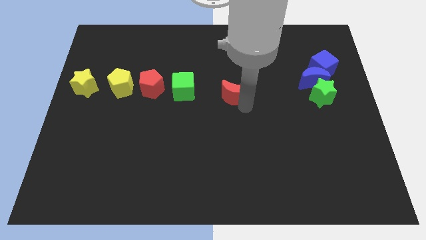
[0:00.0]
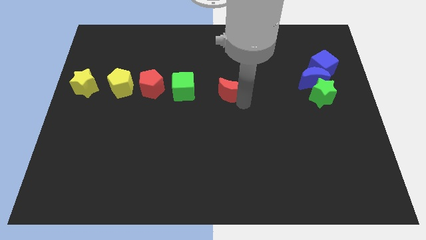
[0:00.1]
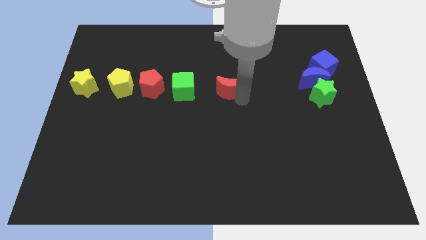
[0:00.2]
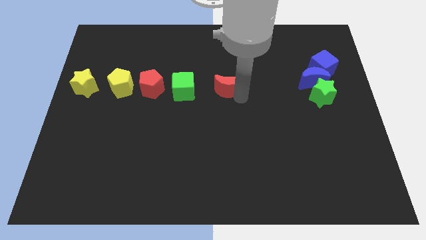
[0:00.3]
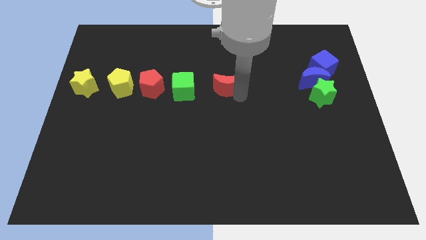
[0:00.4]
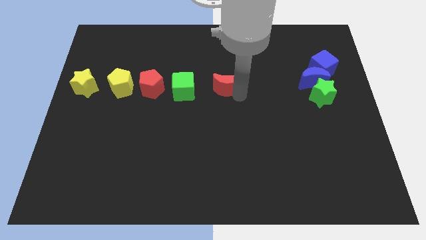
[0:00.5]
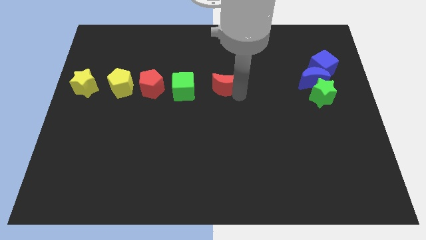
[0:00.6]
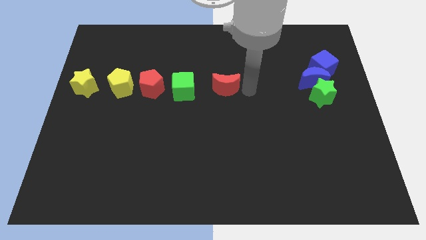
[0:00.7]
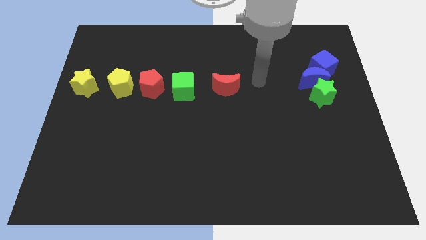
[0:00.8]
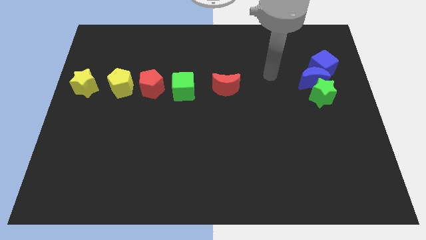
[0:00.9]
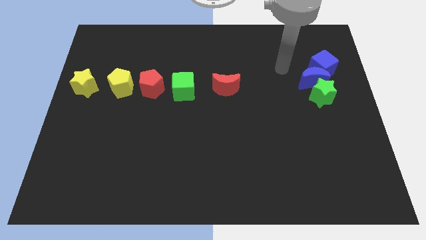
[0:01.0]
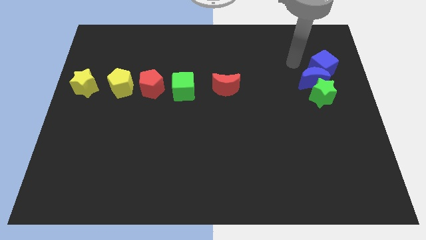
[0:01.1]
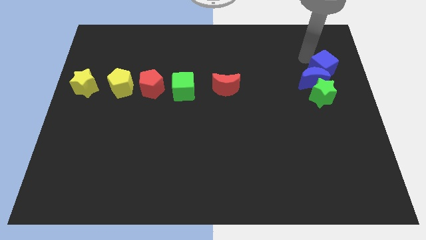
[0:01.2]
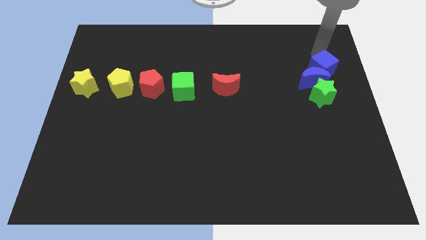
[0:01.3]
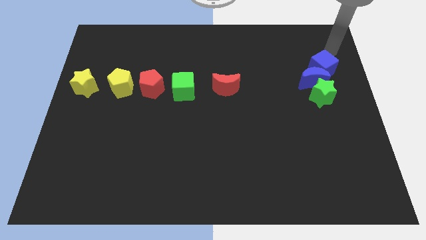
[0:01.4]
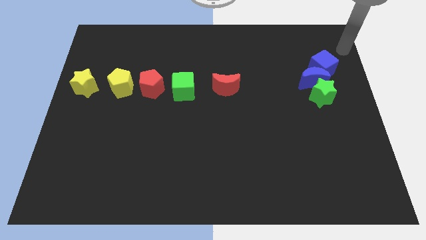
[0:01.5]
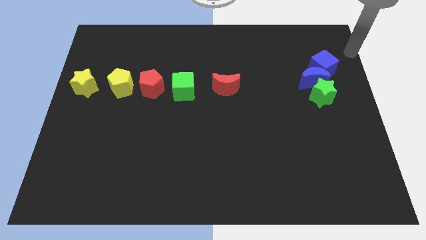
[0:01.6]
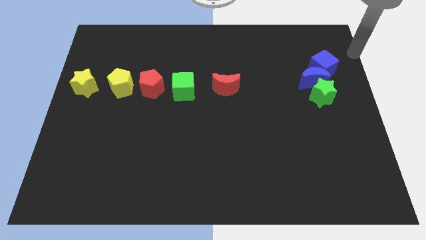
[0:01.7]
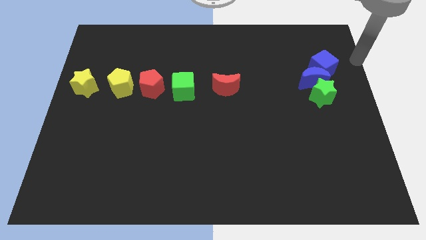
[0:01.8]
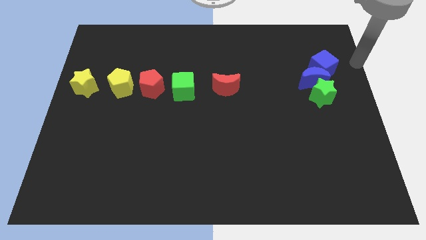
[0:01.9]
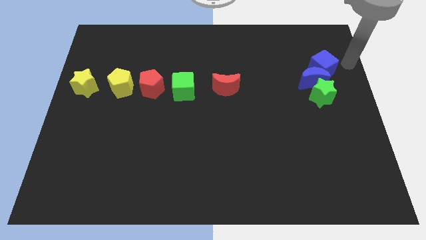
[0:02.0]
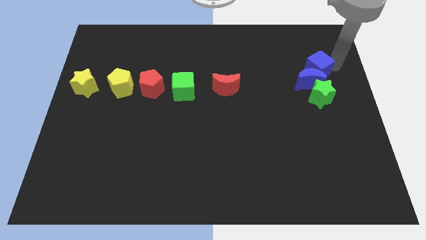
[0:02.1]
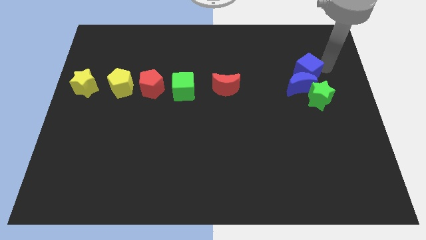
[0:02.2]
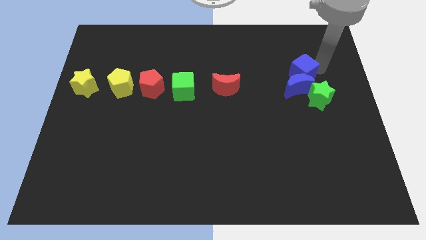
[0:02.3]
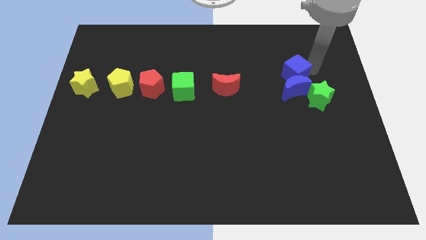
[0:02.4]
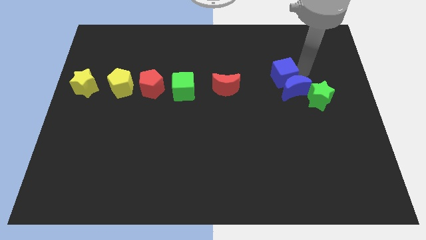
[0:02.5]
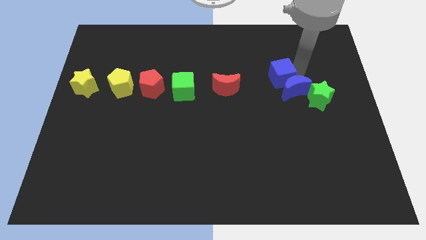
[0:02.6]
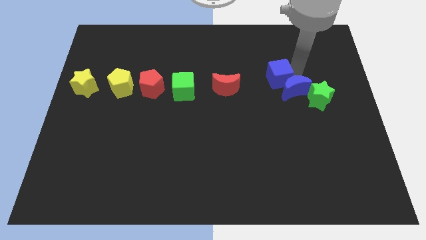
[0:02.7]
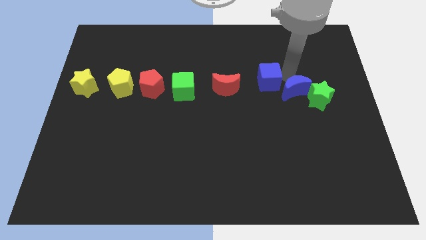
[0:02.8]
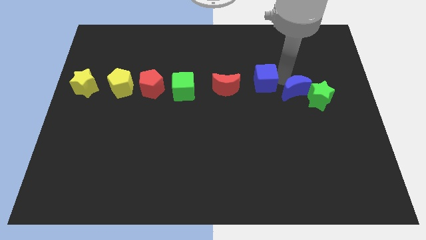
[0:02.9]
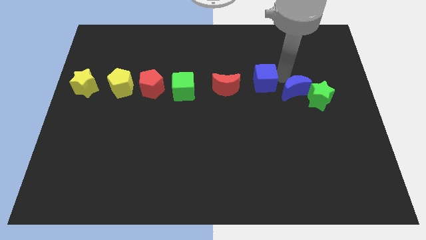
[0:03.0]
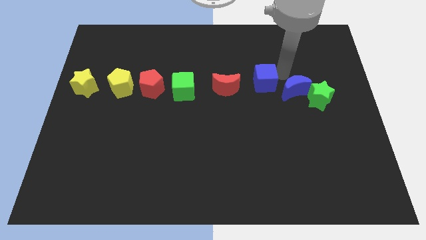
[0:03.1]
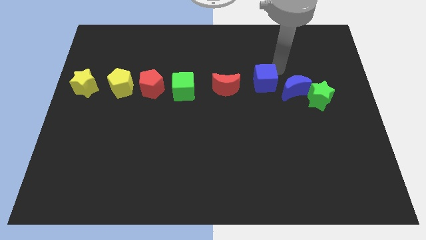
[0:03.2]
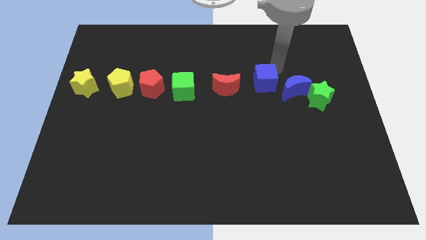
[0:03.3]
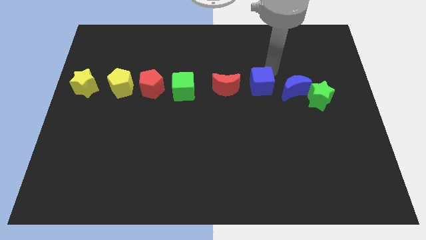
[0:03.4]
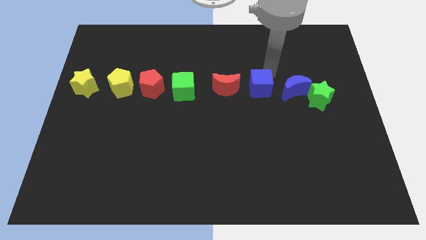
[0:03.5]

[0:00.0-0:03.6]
push blue cube beside red crescent

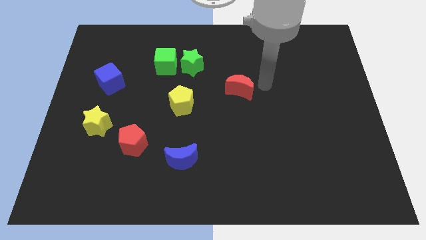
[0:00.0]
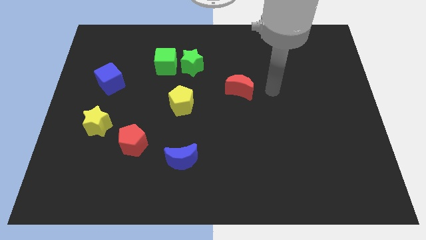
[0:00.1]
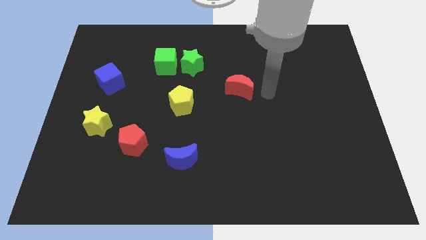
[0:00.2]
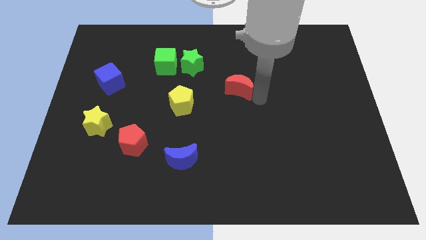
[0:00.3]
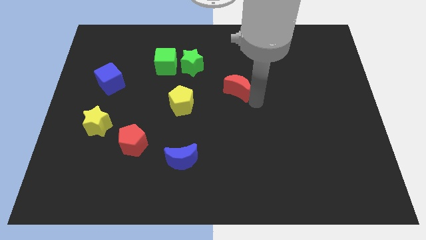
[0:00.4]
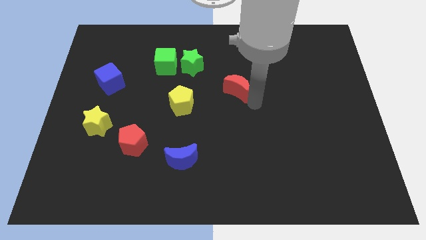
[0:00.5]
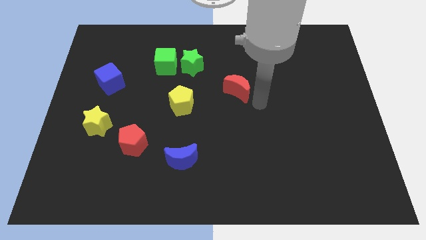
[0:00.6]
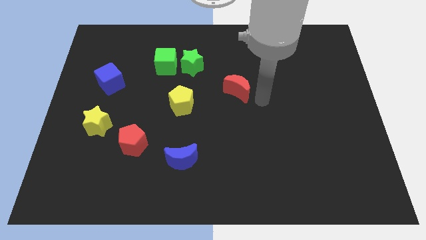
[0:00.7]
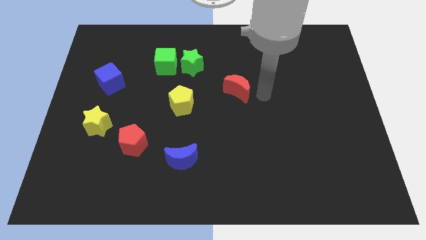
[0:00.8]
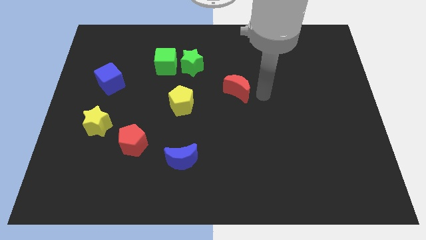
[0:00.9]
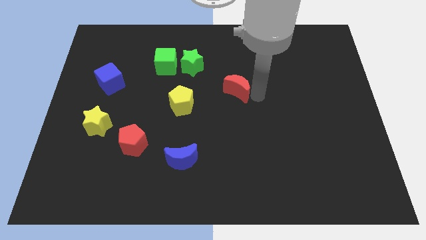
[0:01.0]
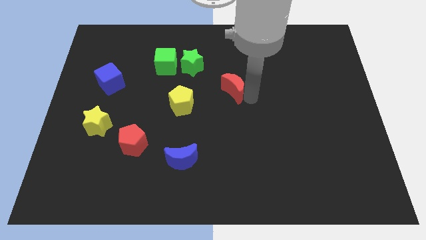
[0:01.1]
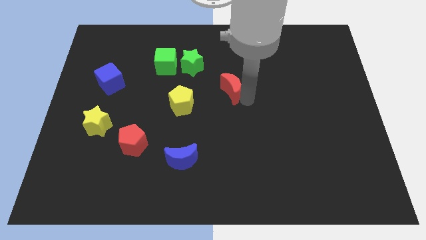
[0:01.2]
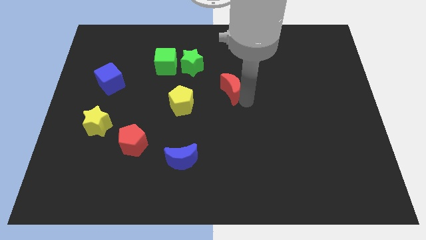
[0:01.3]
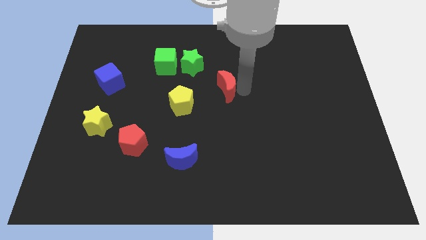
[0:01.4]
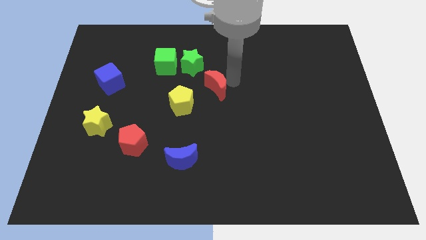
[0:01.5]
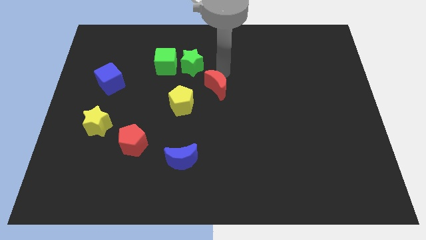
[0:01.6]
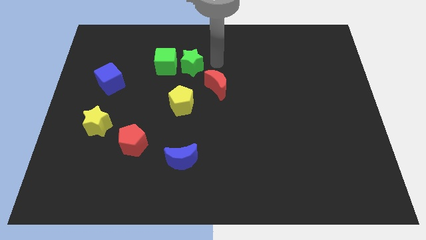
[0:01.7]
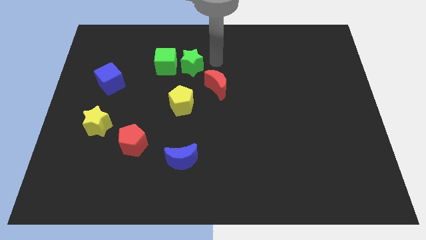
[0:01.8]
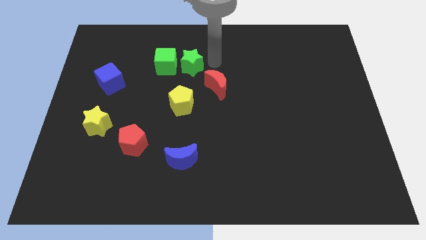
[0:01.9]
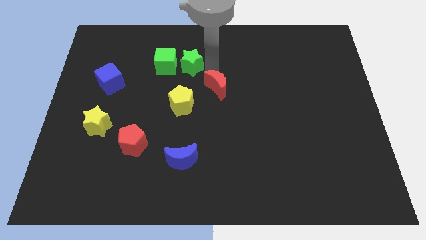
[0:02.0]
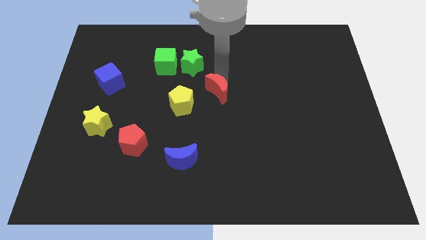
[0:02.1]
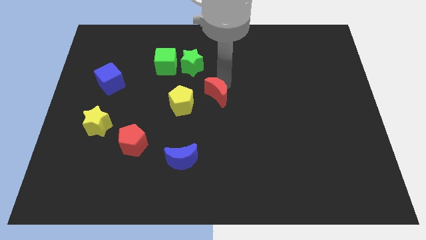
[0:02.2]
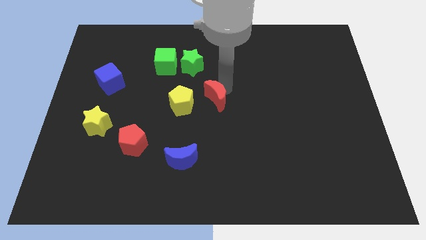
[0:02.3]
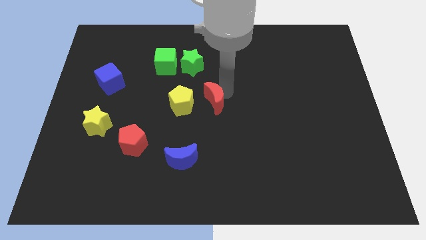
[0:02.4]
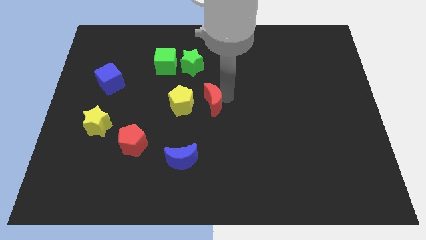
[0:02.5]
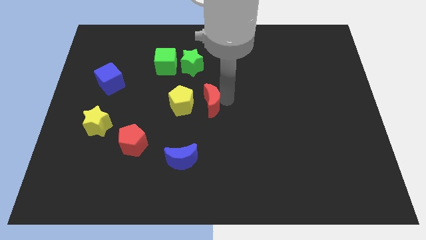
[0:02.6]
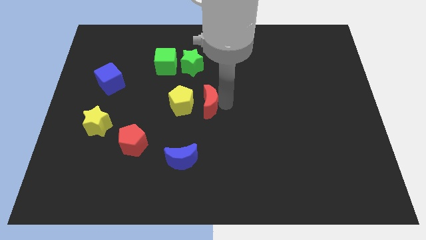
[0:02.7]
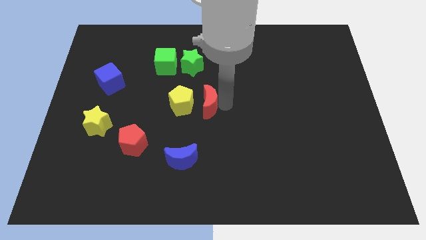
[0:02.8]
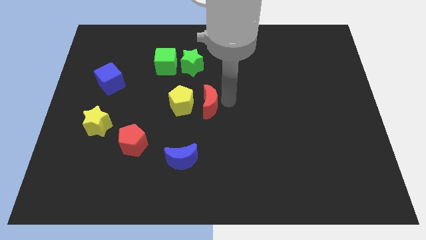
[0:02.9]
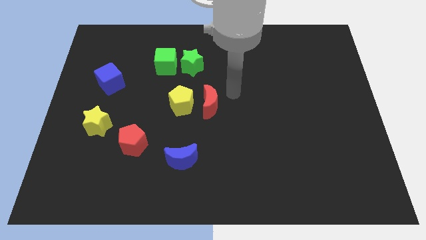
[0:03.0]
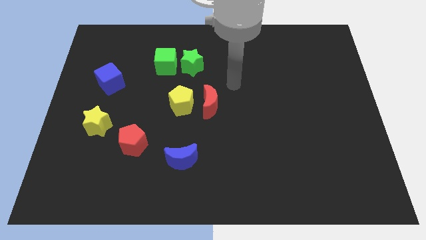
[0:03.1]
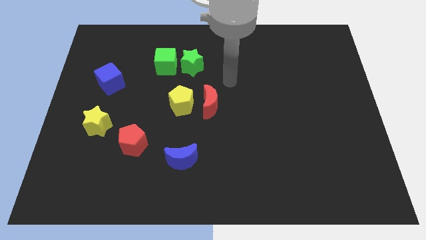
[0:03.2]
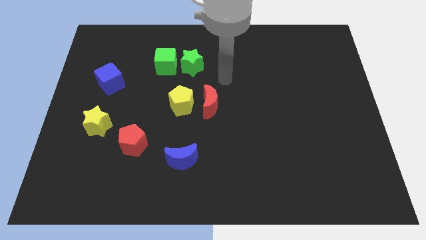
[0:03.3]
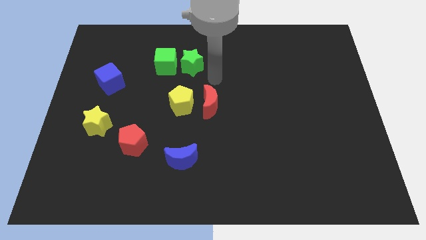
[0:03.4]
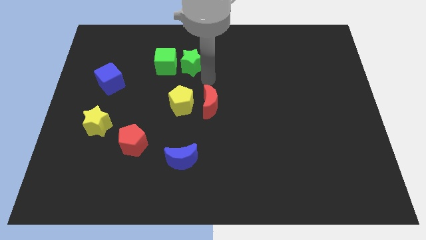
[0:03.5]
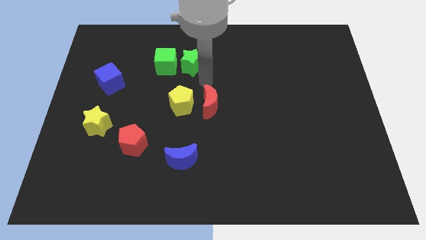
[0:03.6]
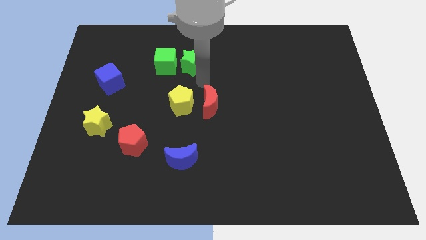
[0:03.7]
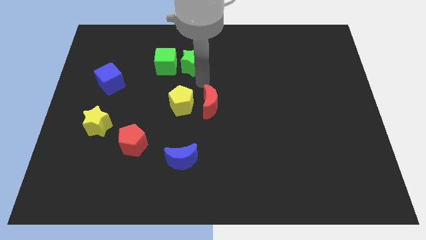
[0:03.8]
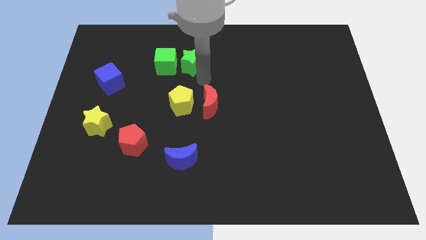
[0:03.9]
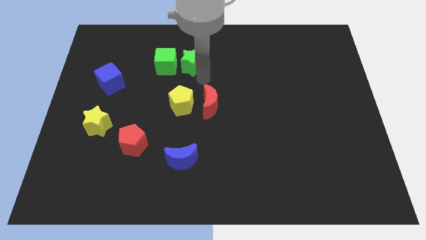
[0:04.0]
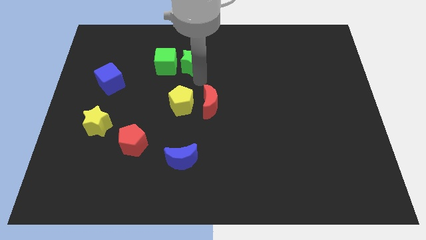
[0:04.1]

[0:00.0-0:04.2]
place the red moon to the right of the yellow pentagon

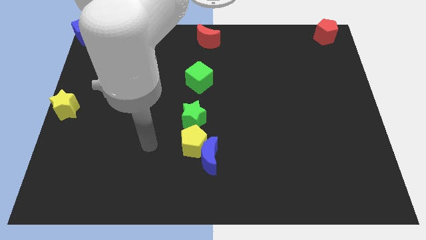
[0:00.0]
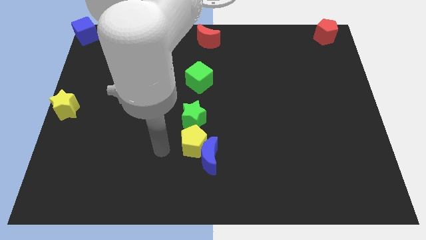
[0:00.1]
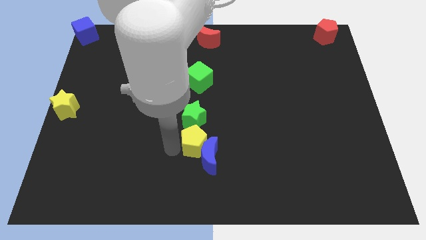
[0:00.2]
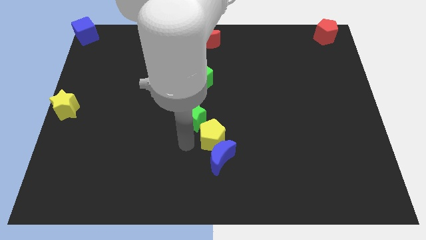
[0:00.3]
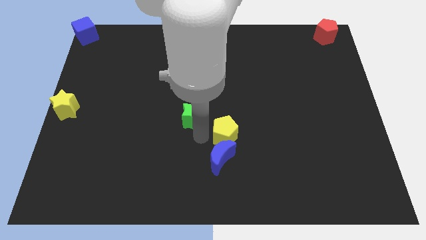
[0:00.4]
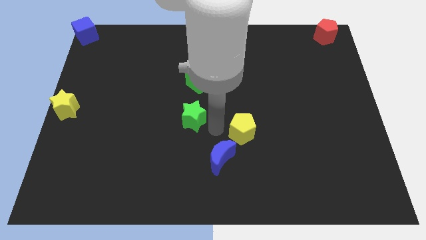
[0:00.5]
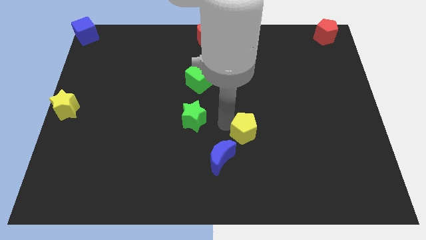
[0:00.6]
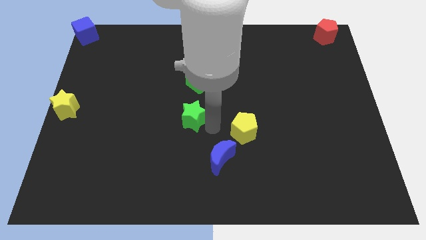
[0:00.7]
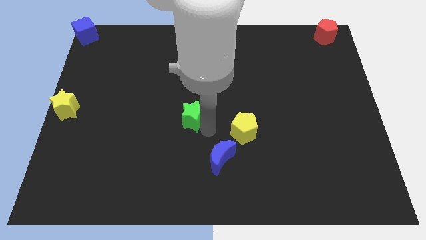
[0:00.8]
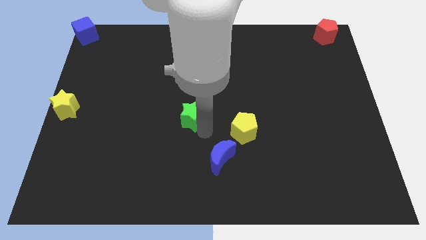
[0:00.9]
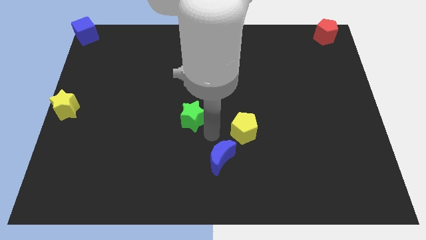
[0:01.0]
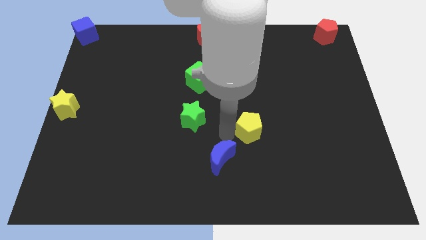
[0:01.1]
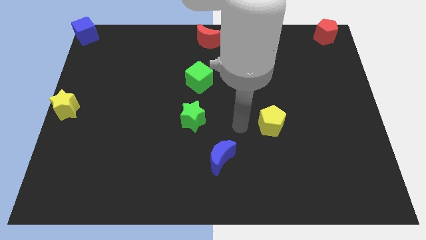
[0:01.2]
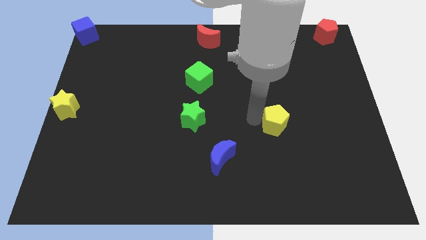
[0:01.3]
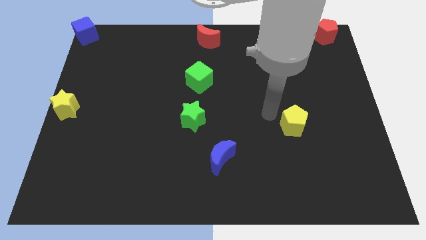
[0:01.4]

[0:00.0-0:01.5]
separate the yellow pentagon from the green star and the blue crescent
